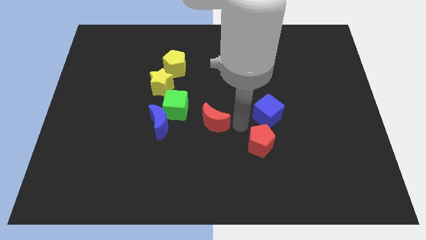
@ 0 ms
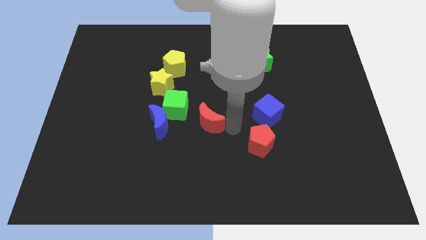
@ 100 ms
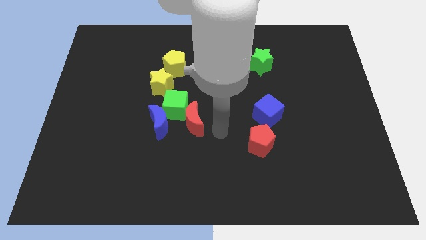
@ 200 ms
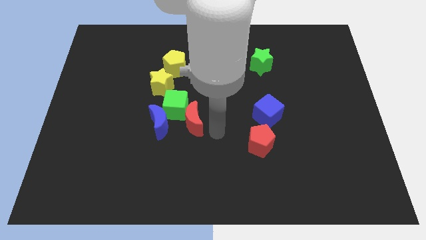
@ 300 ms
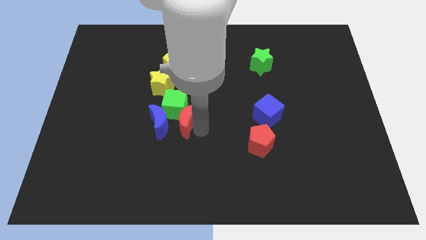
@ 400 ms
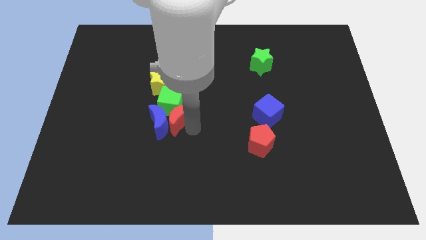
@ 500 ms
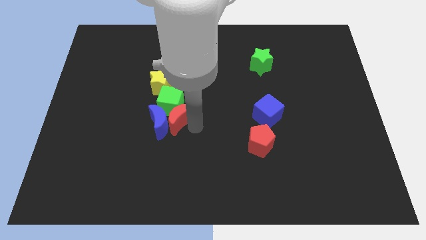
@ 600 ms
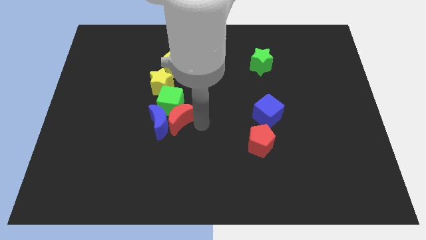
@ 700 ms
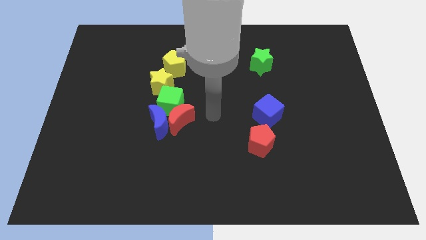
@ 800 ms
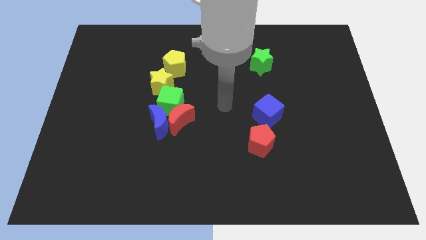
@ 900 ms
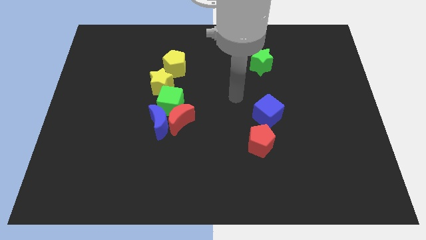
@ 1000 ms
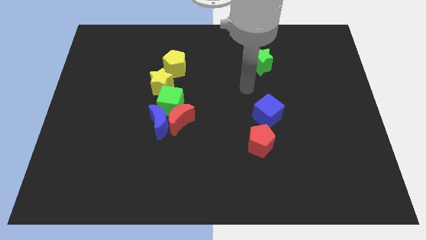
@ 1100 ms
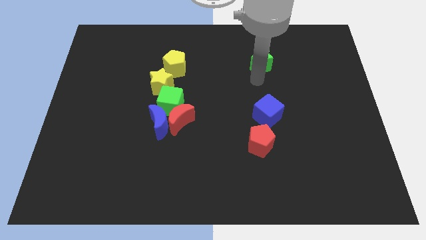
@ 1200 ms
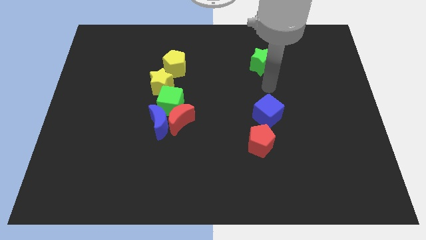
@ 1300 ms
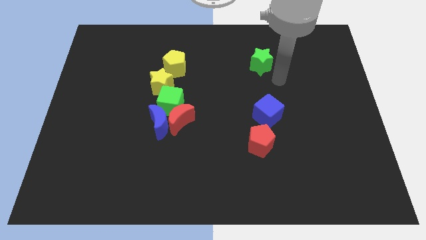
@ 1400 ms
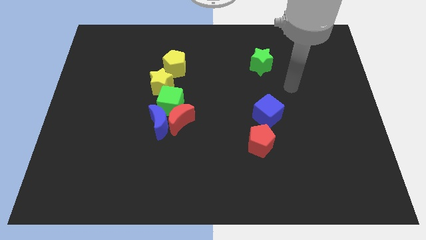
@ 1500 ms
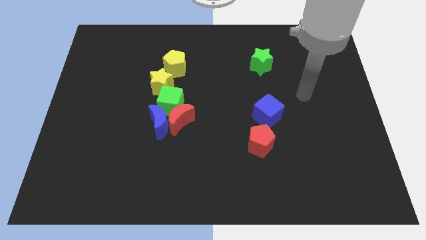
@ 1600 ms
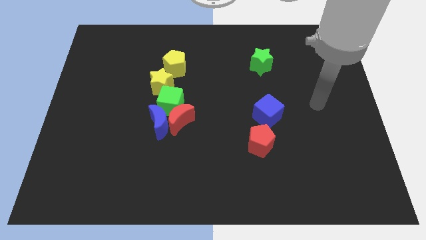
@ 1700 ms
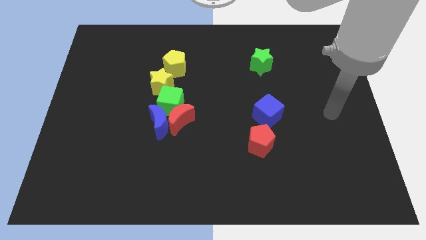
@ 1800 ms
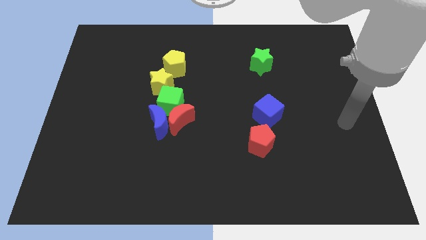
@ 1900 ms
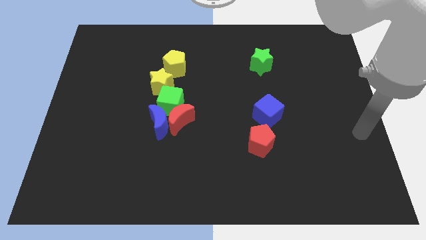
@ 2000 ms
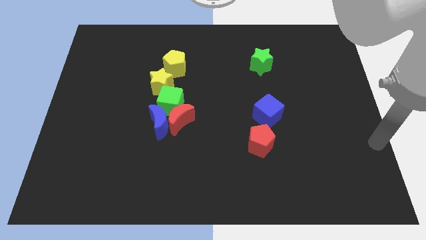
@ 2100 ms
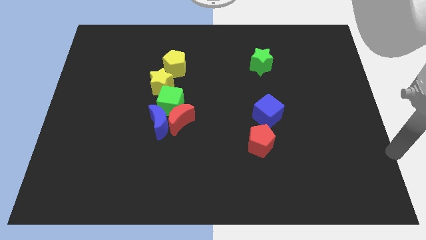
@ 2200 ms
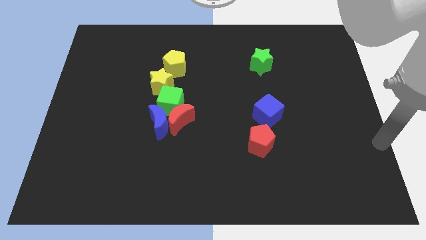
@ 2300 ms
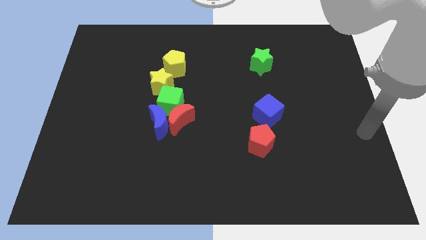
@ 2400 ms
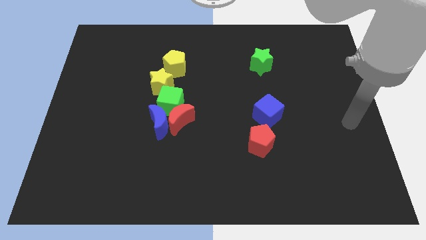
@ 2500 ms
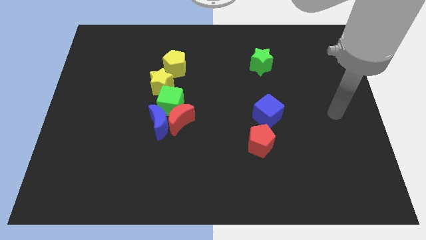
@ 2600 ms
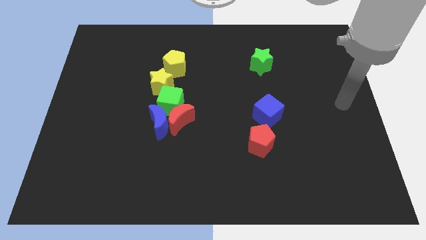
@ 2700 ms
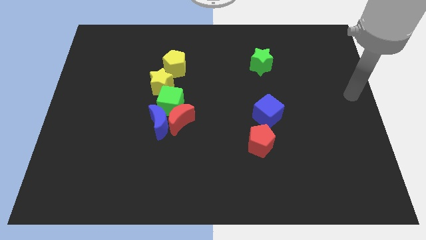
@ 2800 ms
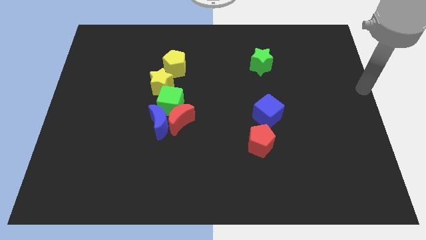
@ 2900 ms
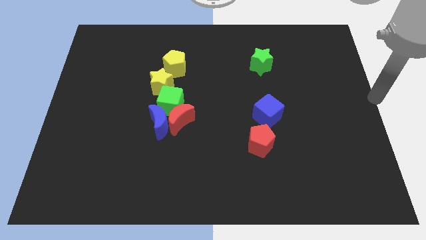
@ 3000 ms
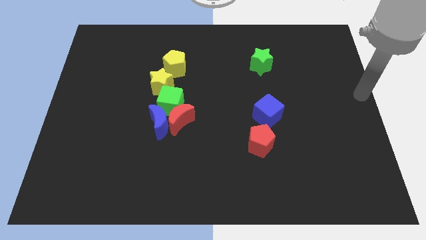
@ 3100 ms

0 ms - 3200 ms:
push the red moon into group of blocks

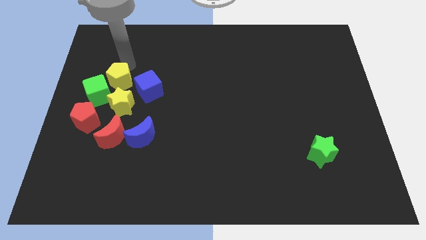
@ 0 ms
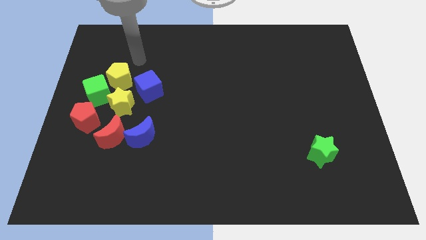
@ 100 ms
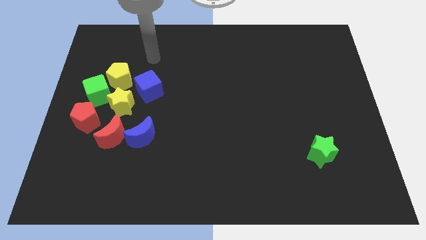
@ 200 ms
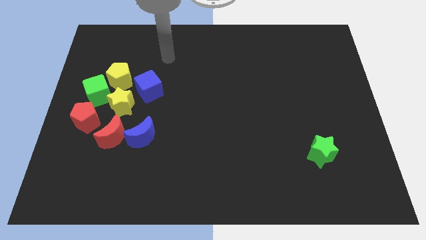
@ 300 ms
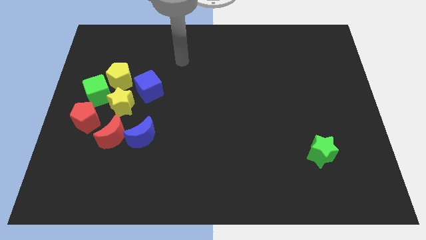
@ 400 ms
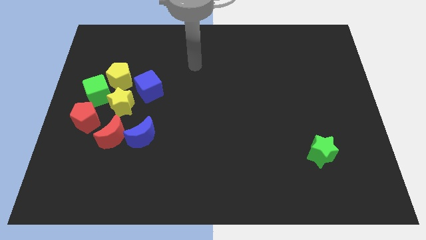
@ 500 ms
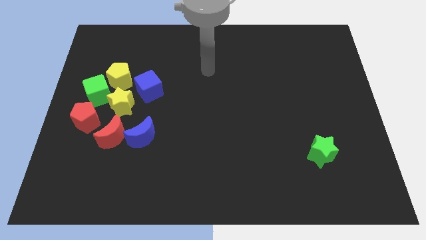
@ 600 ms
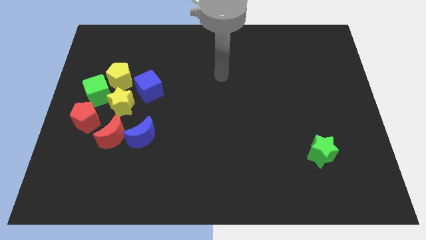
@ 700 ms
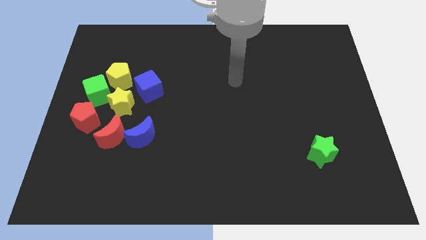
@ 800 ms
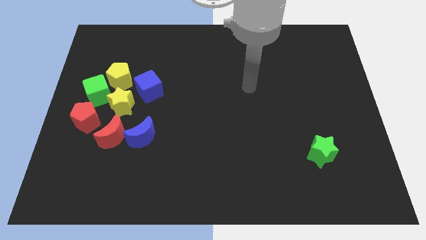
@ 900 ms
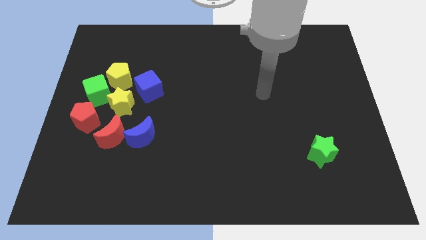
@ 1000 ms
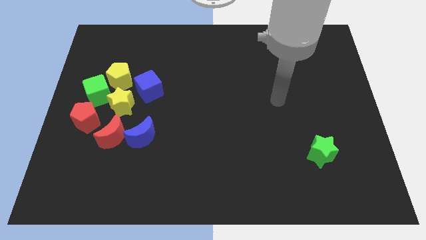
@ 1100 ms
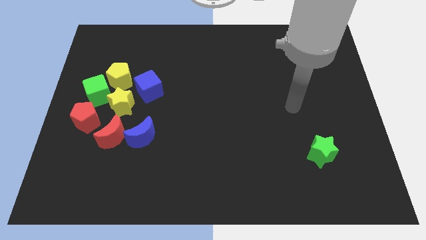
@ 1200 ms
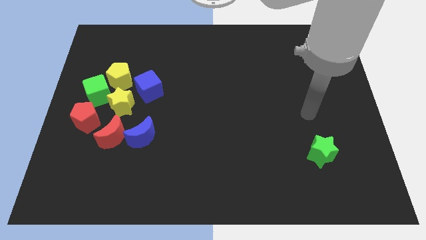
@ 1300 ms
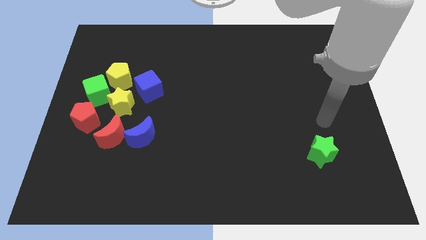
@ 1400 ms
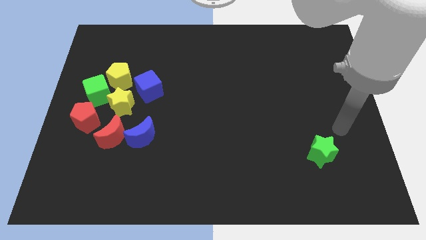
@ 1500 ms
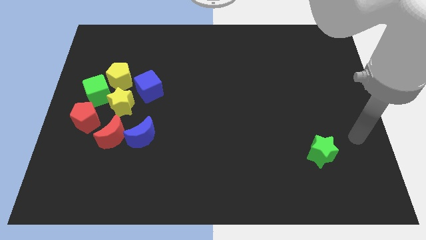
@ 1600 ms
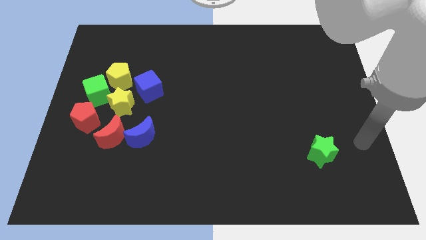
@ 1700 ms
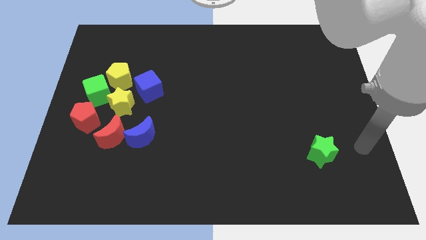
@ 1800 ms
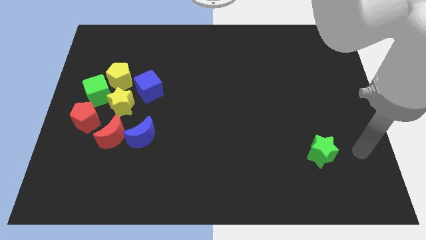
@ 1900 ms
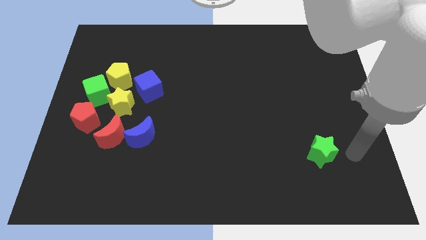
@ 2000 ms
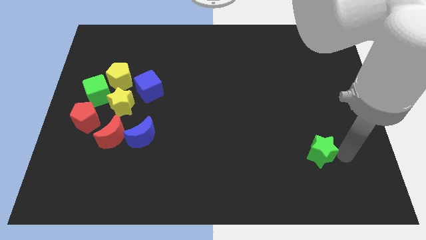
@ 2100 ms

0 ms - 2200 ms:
point your arm to the right side of green star

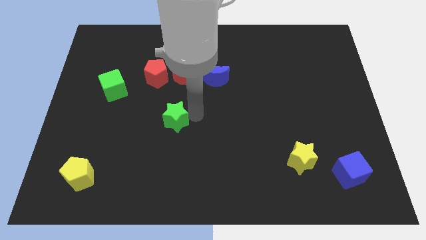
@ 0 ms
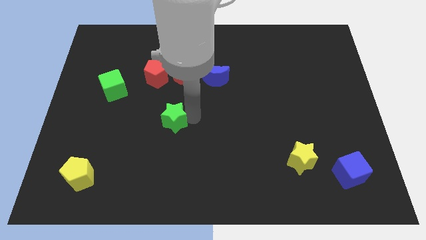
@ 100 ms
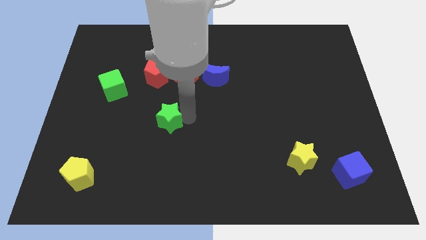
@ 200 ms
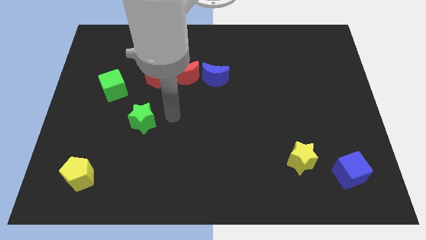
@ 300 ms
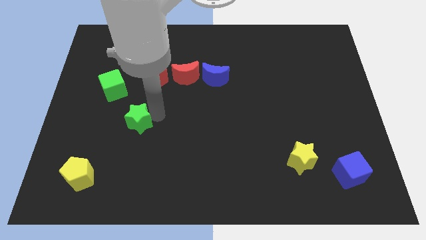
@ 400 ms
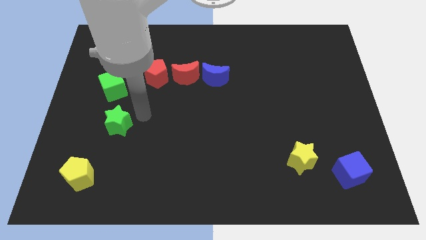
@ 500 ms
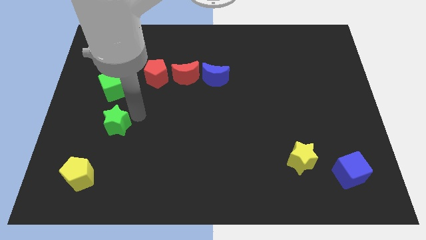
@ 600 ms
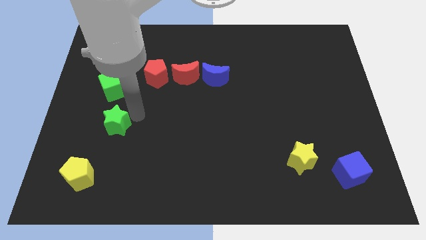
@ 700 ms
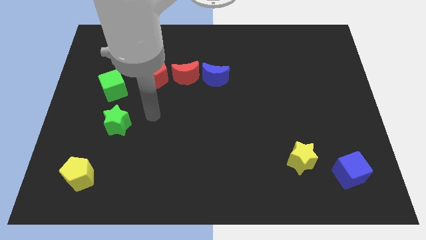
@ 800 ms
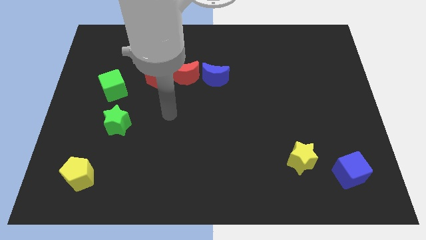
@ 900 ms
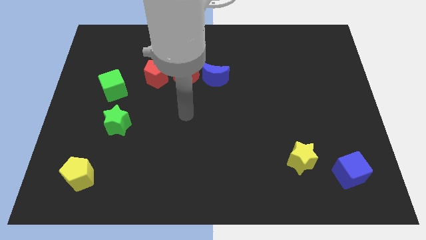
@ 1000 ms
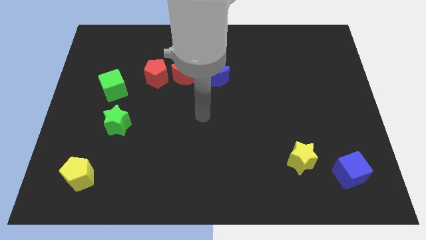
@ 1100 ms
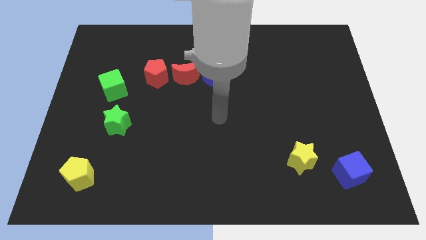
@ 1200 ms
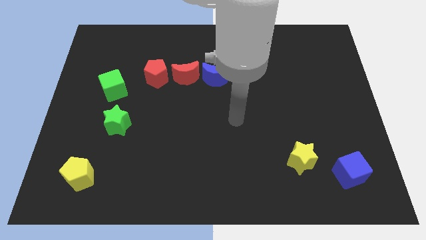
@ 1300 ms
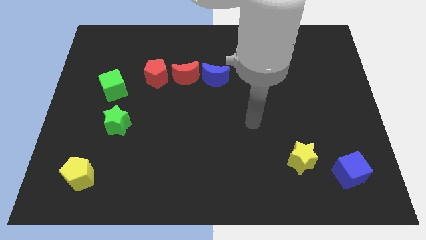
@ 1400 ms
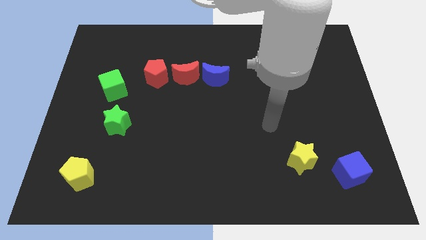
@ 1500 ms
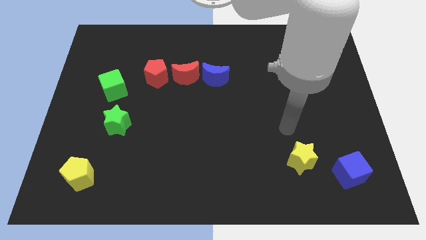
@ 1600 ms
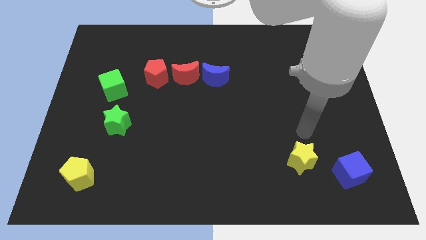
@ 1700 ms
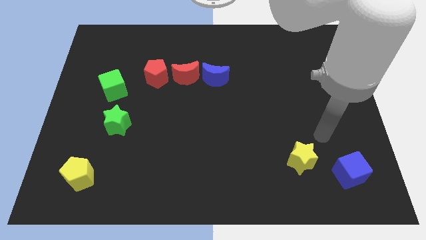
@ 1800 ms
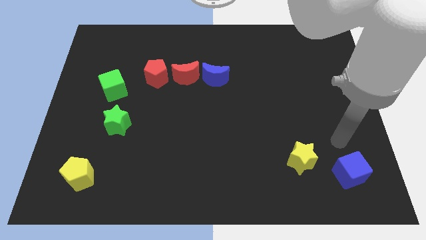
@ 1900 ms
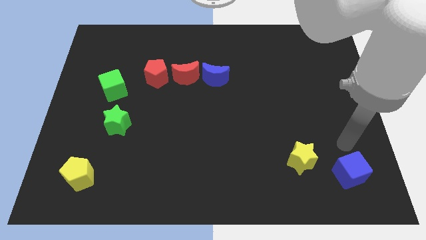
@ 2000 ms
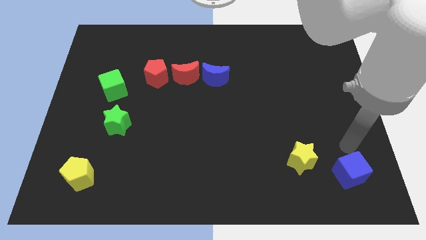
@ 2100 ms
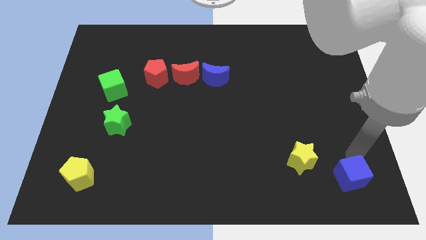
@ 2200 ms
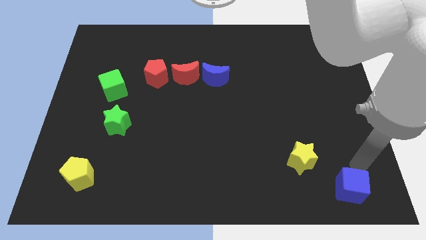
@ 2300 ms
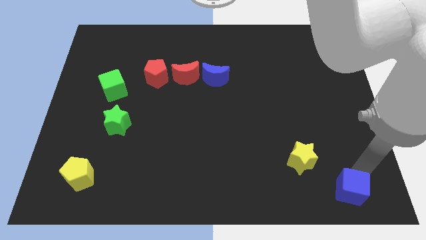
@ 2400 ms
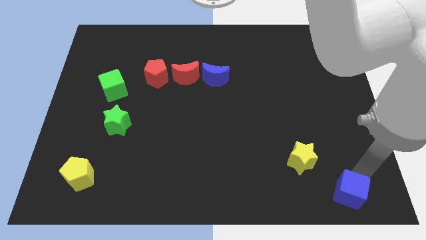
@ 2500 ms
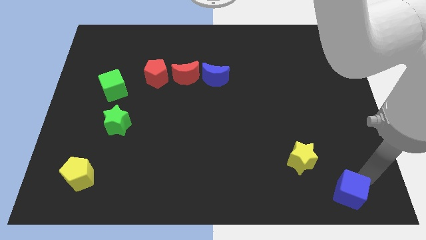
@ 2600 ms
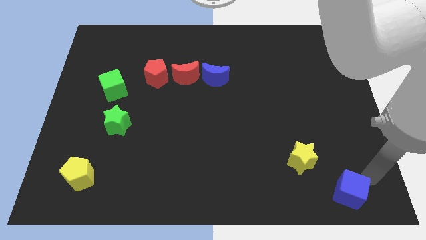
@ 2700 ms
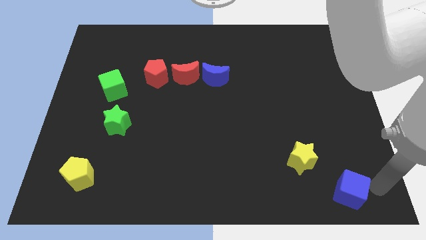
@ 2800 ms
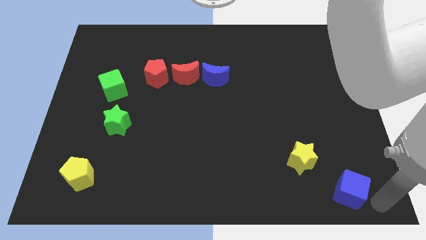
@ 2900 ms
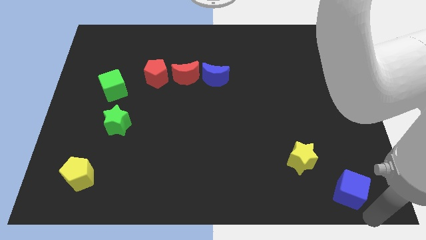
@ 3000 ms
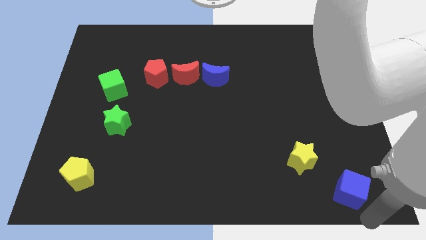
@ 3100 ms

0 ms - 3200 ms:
push the blue cube slightly down

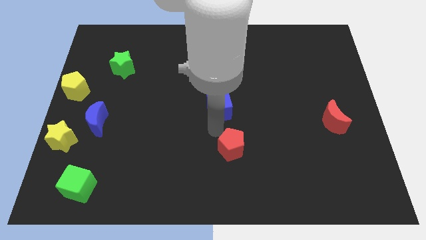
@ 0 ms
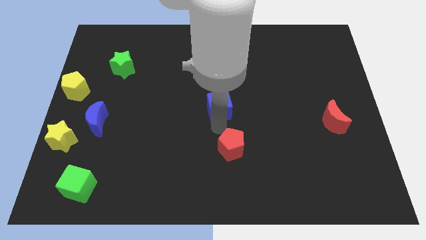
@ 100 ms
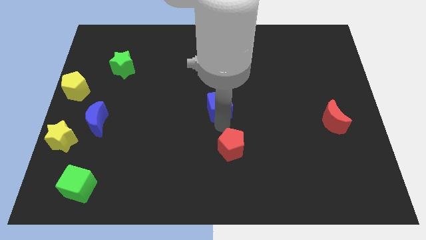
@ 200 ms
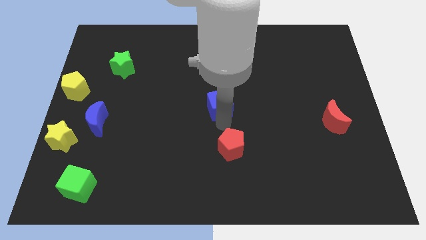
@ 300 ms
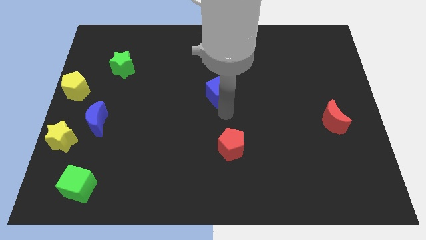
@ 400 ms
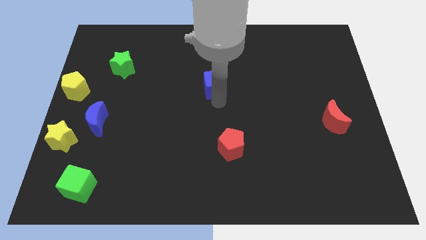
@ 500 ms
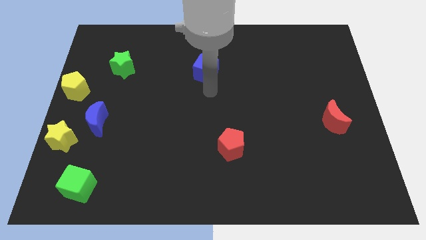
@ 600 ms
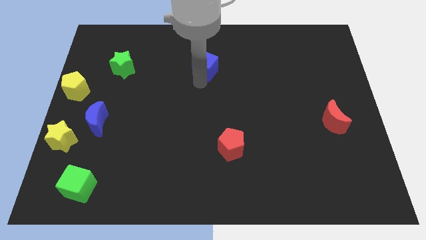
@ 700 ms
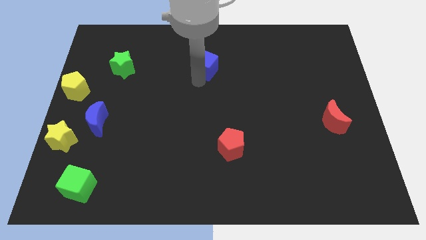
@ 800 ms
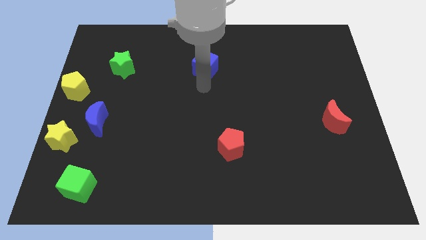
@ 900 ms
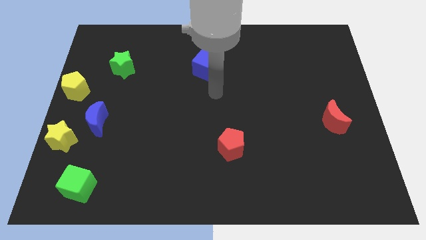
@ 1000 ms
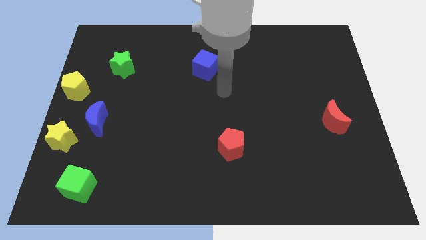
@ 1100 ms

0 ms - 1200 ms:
push the blue cube upwards of the board
